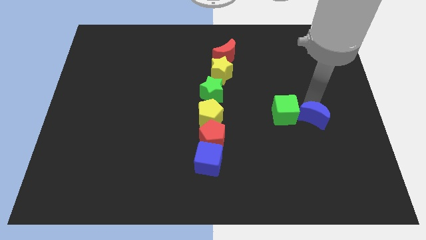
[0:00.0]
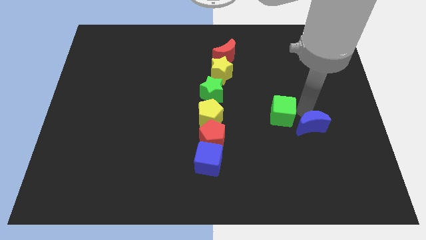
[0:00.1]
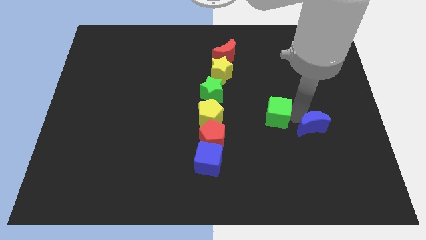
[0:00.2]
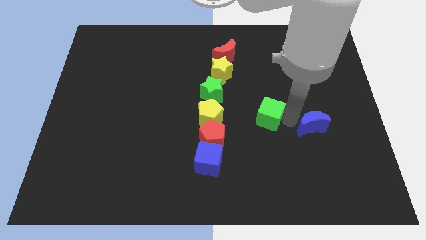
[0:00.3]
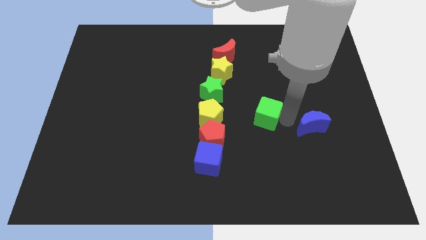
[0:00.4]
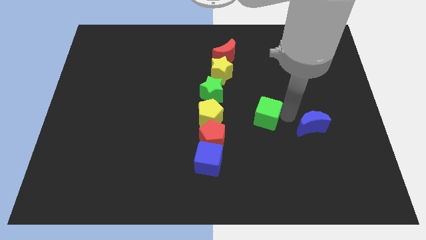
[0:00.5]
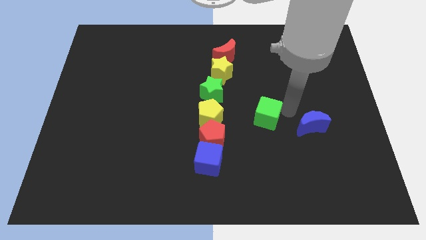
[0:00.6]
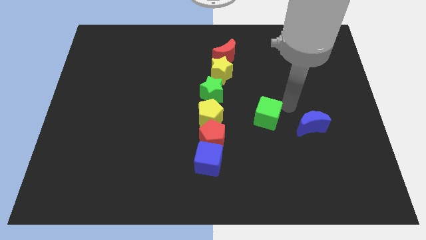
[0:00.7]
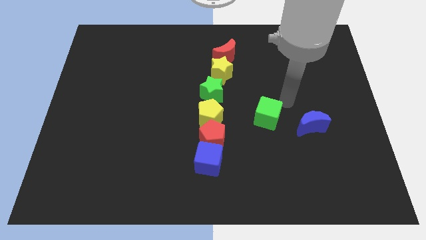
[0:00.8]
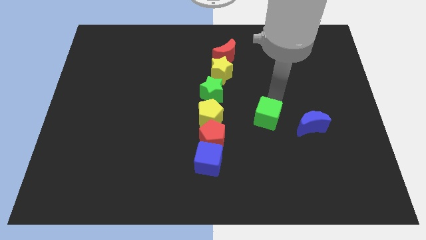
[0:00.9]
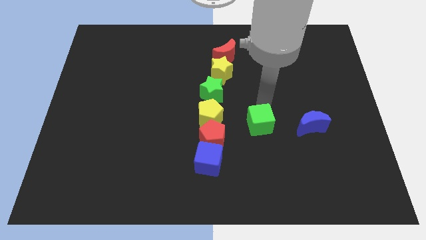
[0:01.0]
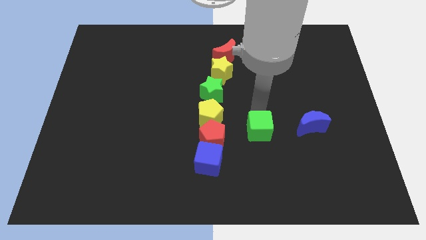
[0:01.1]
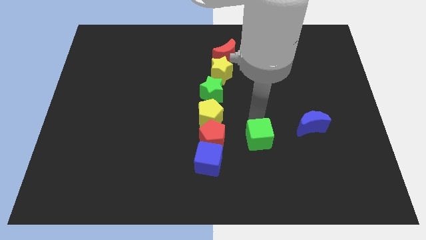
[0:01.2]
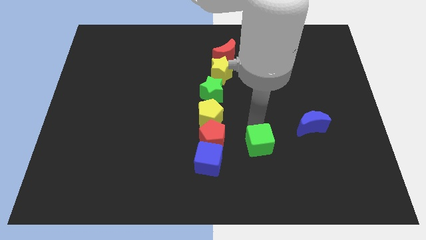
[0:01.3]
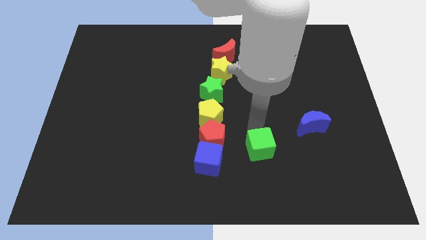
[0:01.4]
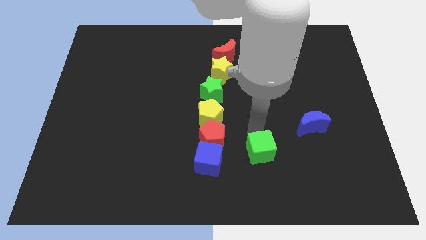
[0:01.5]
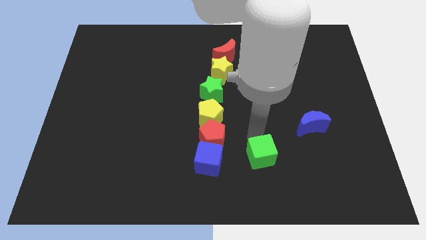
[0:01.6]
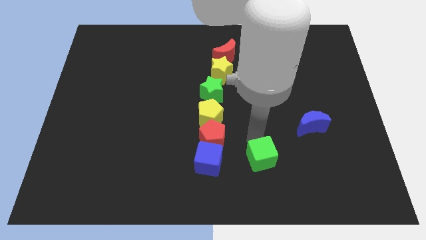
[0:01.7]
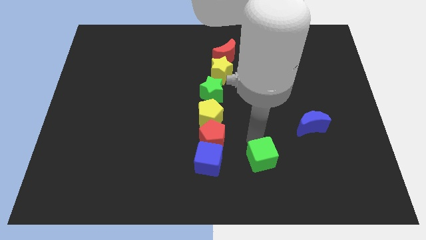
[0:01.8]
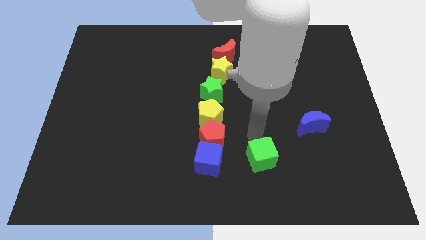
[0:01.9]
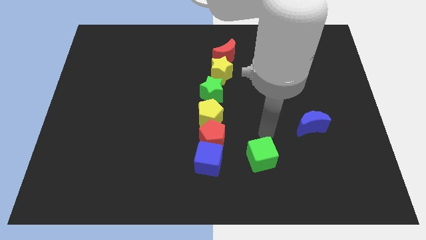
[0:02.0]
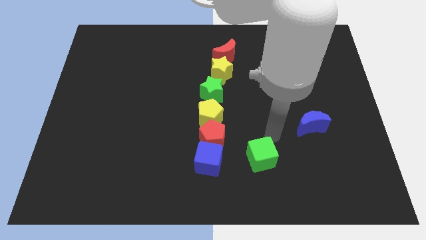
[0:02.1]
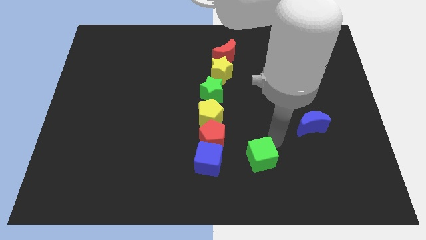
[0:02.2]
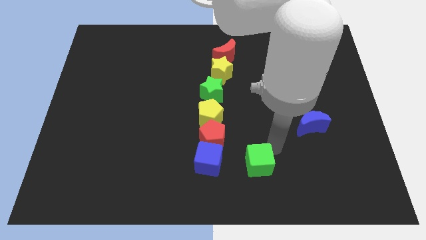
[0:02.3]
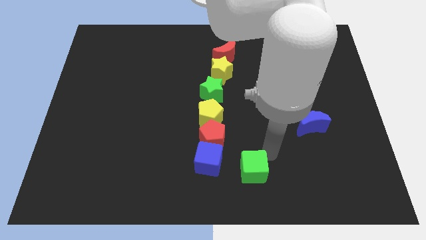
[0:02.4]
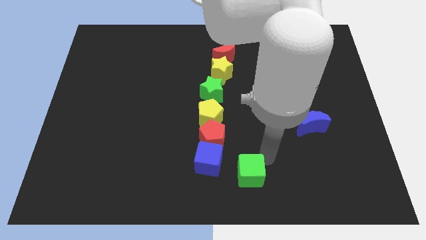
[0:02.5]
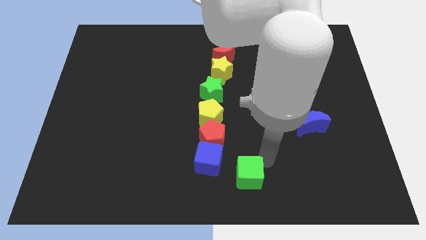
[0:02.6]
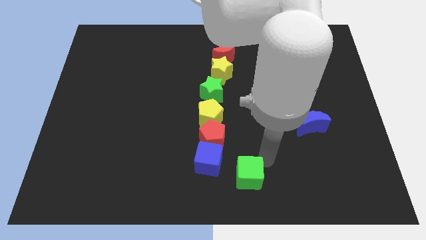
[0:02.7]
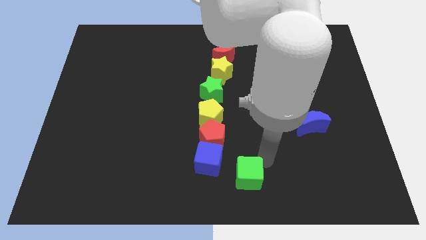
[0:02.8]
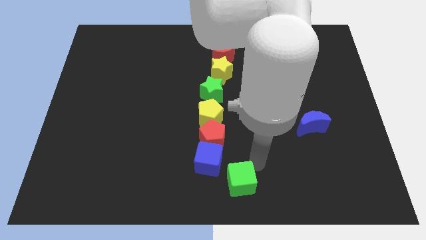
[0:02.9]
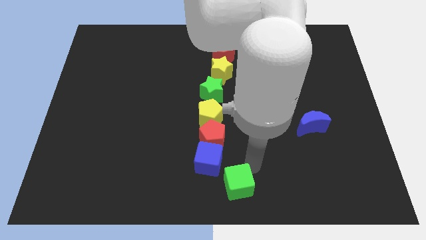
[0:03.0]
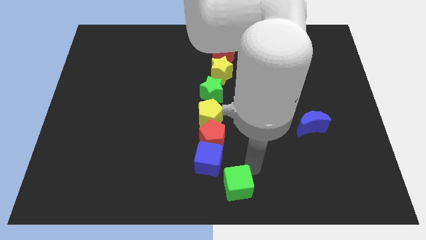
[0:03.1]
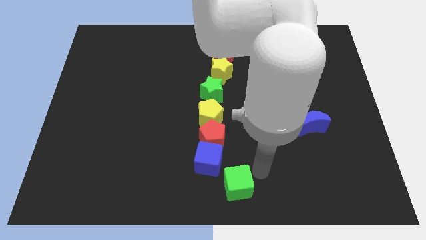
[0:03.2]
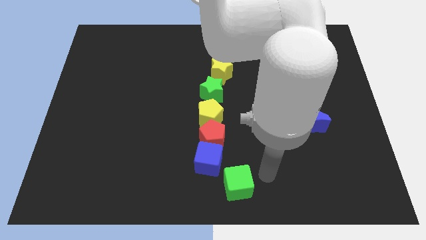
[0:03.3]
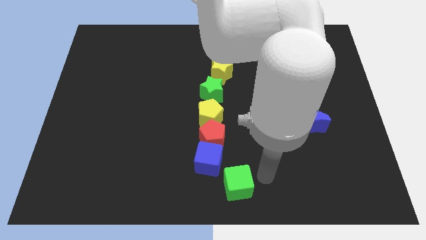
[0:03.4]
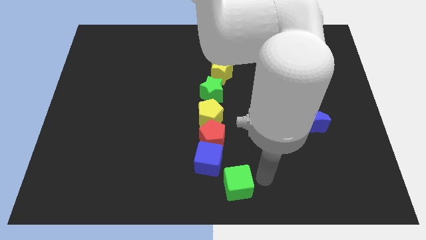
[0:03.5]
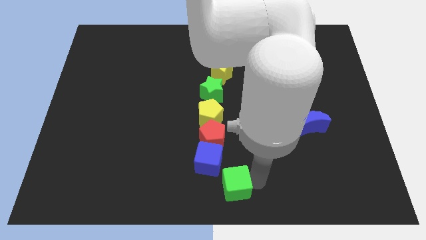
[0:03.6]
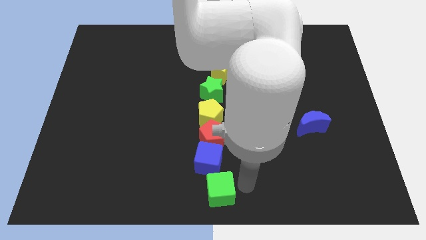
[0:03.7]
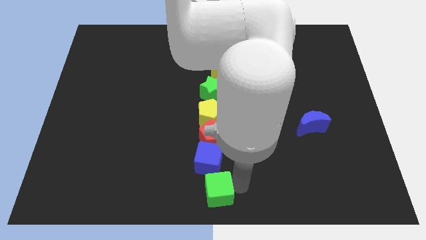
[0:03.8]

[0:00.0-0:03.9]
place green cube below blue cube

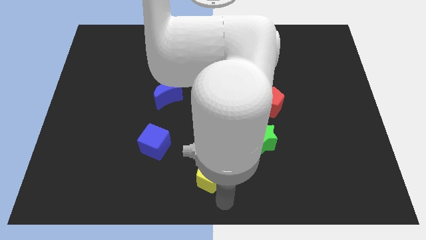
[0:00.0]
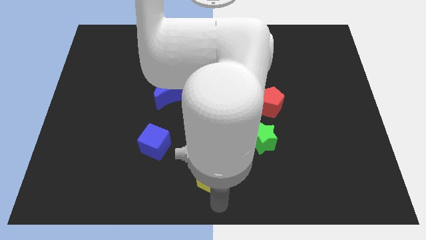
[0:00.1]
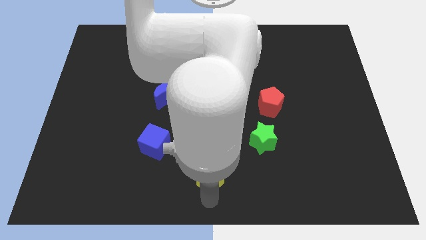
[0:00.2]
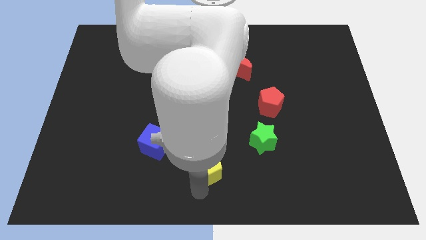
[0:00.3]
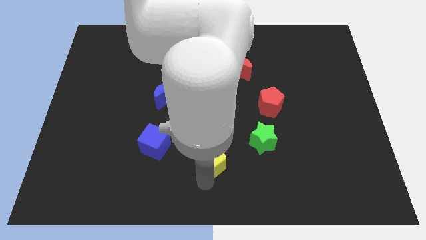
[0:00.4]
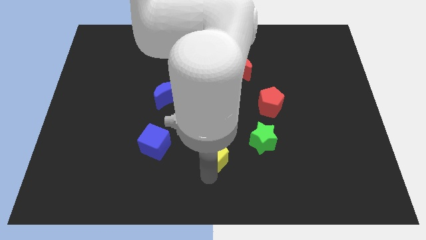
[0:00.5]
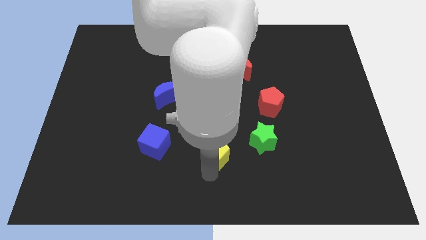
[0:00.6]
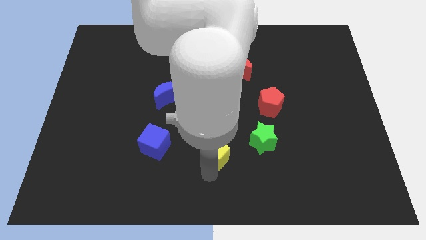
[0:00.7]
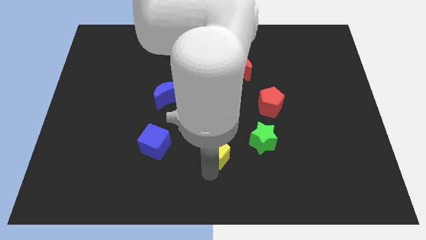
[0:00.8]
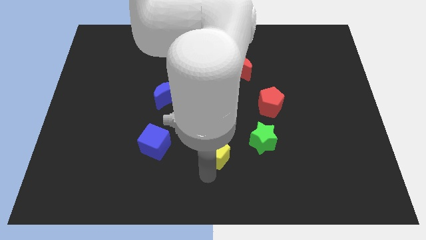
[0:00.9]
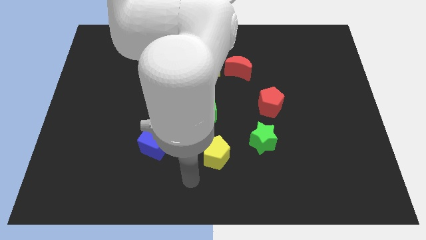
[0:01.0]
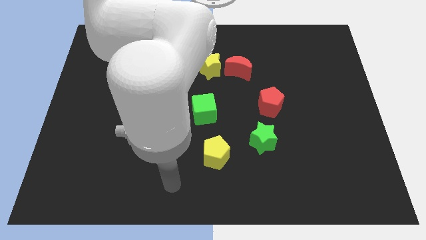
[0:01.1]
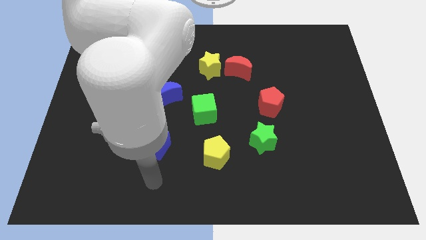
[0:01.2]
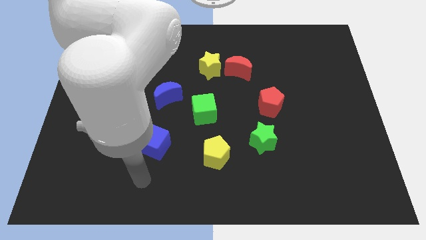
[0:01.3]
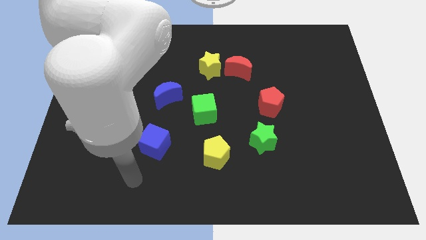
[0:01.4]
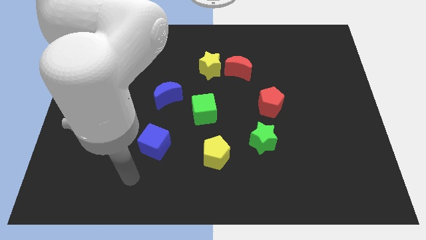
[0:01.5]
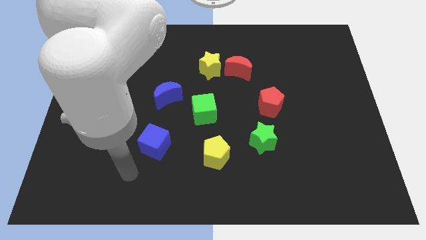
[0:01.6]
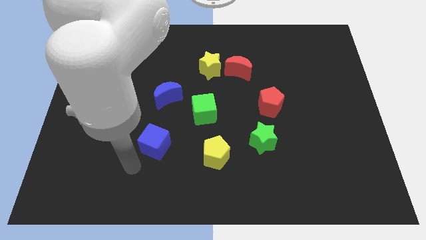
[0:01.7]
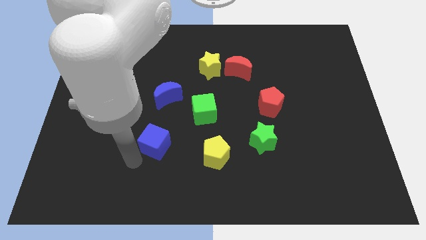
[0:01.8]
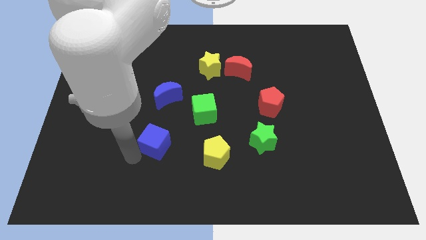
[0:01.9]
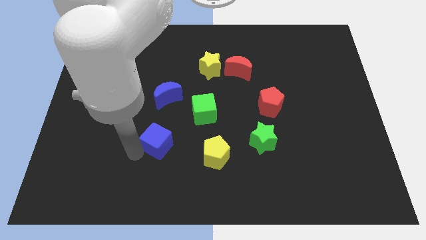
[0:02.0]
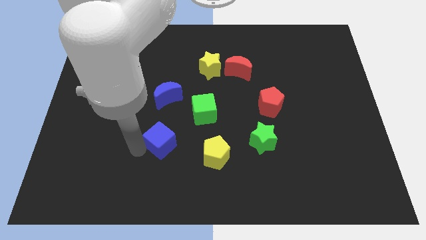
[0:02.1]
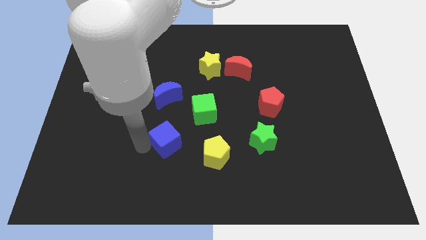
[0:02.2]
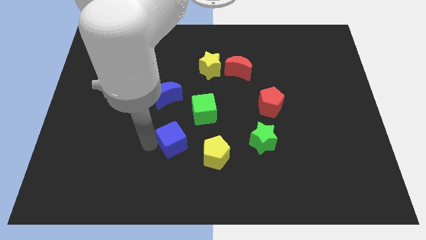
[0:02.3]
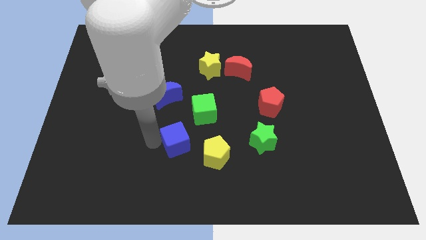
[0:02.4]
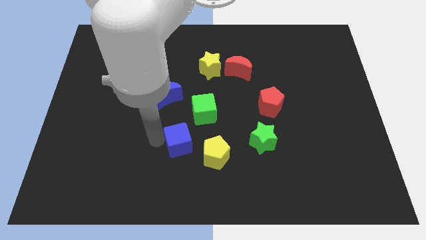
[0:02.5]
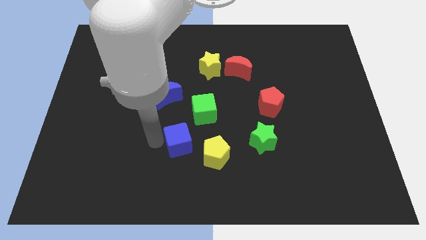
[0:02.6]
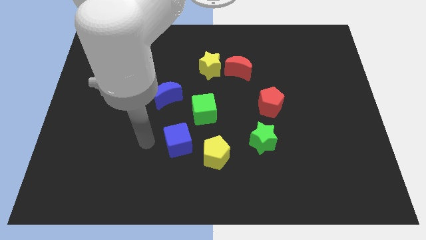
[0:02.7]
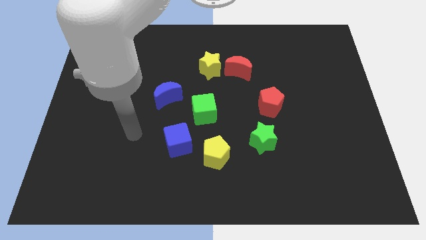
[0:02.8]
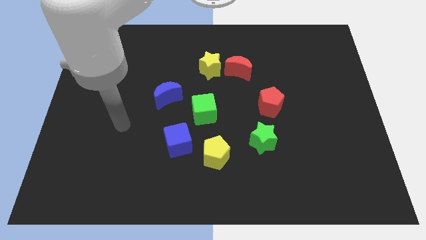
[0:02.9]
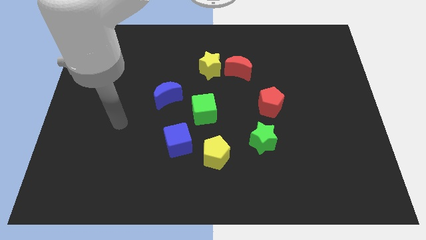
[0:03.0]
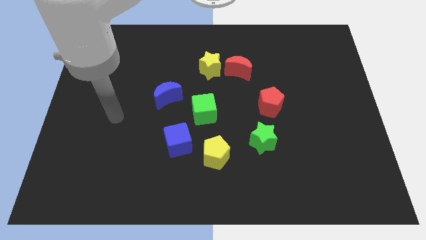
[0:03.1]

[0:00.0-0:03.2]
push the blue cube to the left side of the yellow pentagon

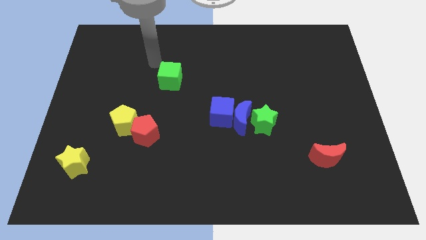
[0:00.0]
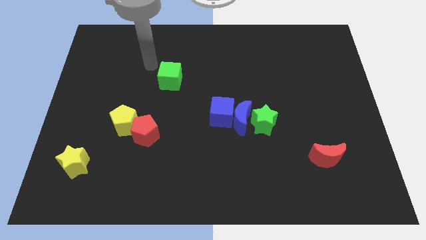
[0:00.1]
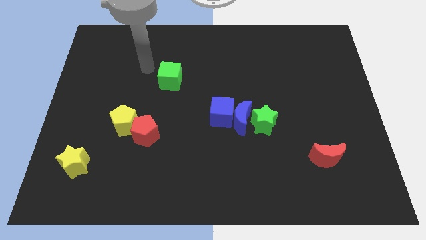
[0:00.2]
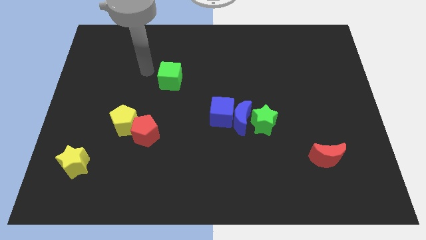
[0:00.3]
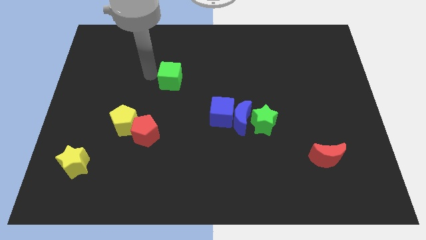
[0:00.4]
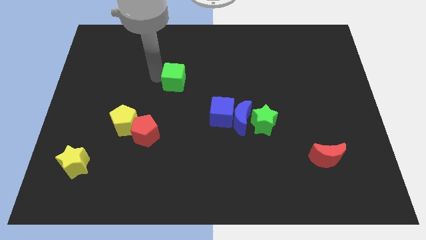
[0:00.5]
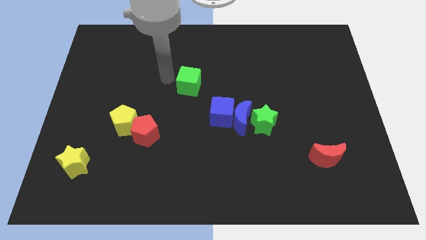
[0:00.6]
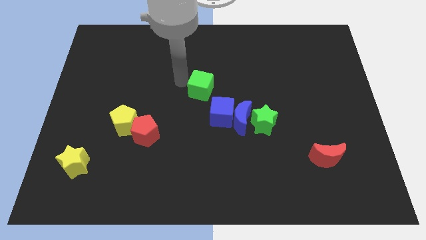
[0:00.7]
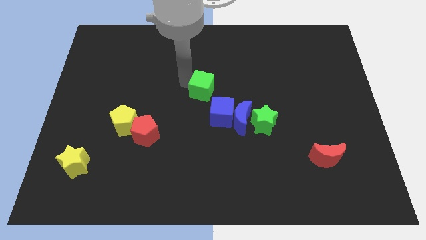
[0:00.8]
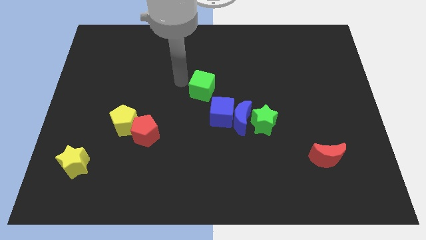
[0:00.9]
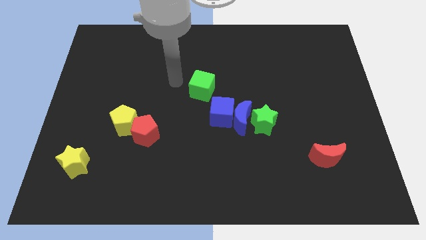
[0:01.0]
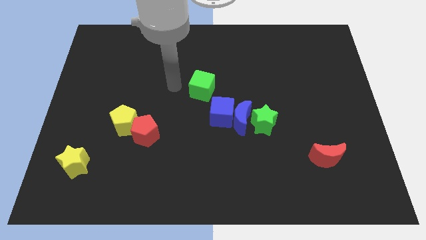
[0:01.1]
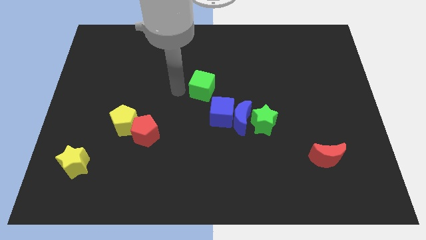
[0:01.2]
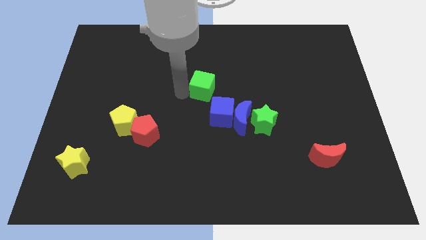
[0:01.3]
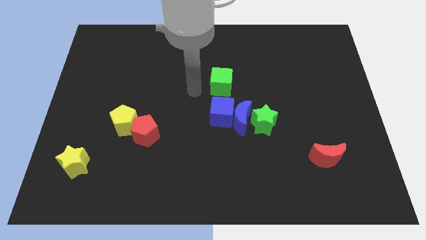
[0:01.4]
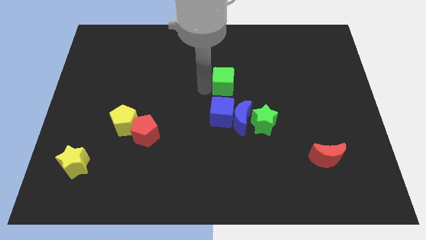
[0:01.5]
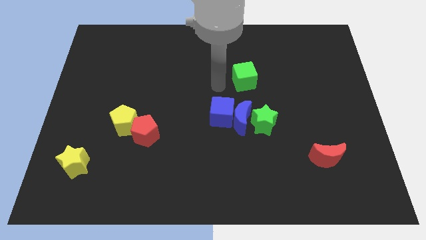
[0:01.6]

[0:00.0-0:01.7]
move the green cube to the top of the blue cube

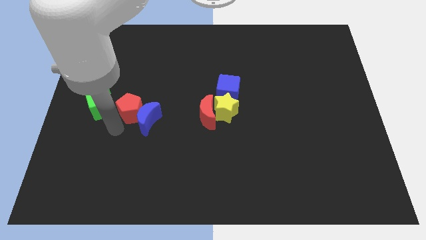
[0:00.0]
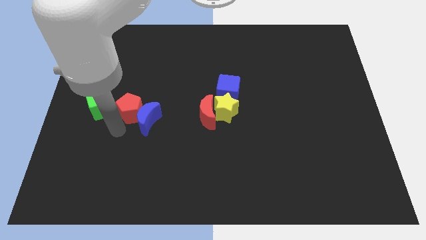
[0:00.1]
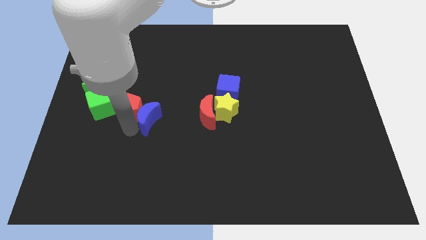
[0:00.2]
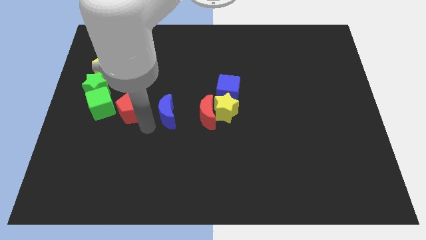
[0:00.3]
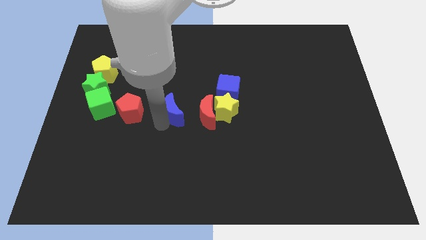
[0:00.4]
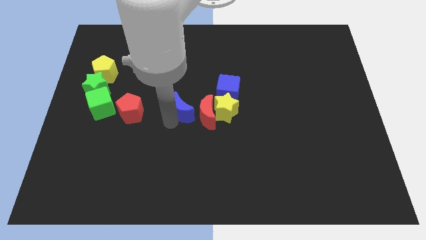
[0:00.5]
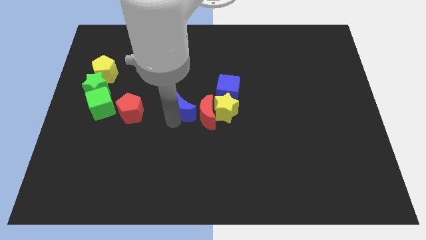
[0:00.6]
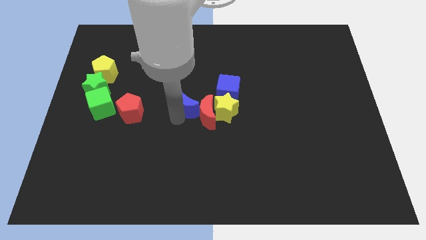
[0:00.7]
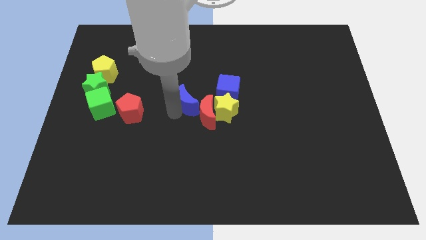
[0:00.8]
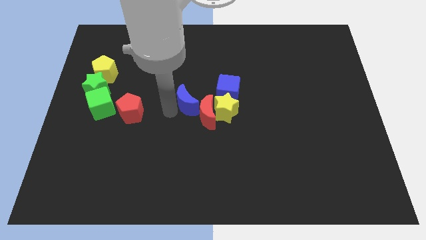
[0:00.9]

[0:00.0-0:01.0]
move blue moon into the red moon
